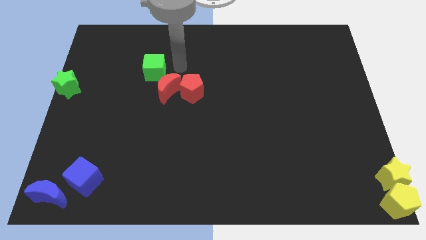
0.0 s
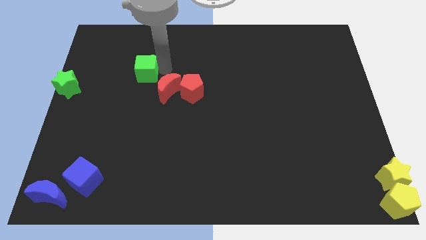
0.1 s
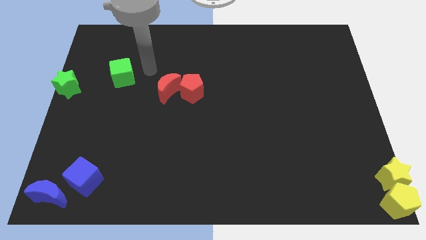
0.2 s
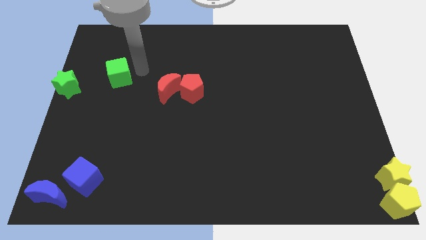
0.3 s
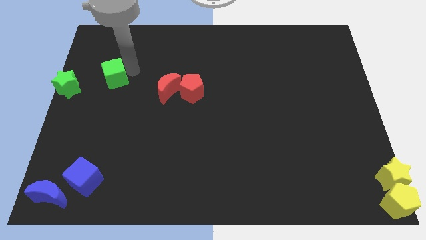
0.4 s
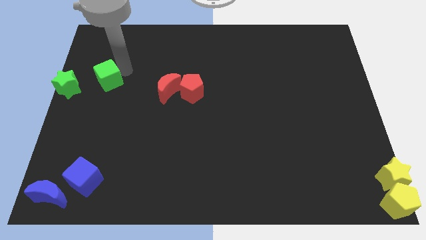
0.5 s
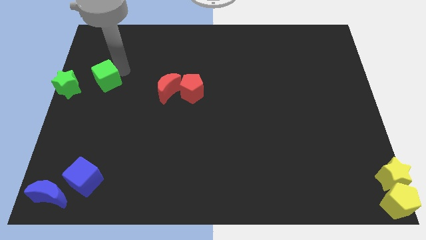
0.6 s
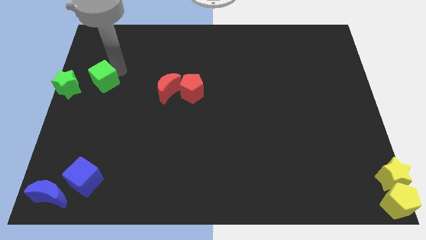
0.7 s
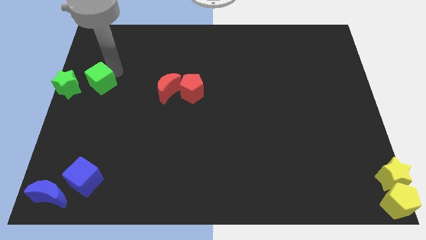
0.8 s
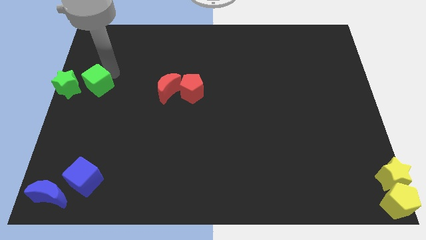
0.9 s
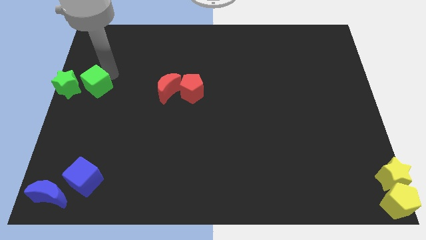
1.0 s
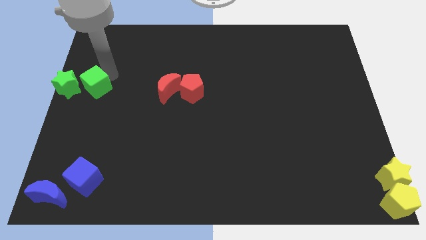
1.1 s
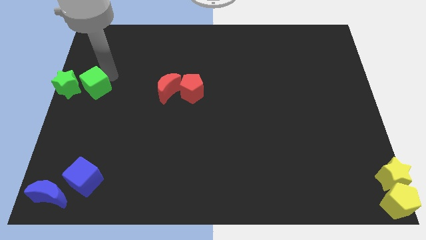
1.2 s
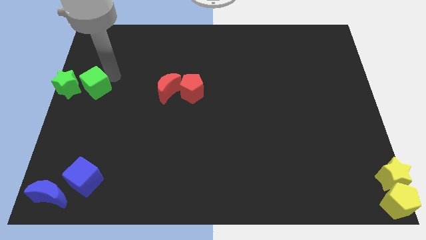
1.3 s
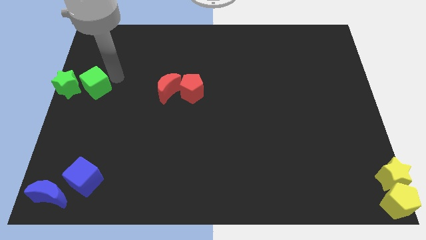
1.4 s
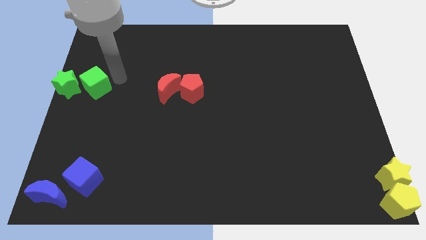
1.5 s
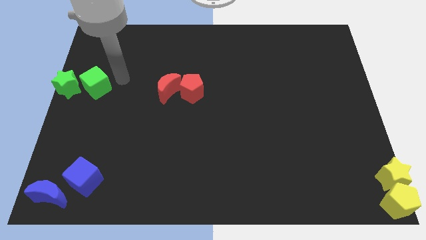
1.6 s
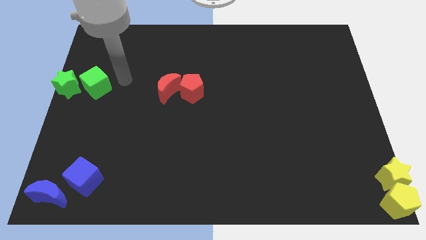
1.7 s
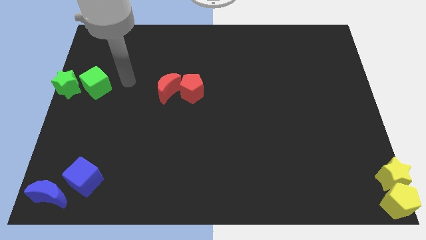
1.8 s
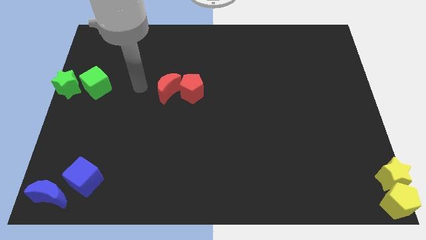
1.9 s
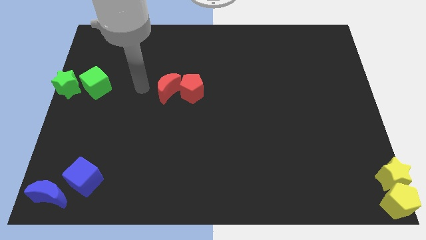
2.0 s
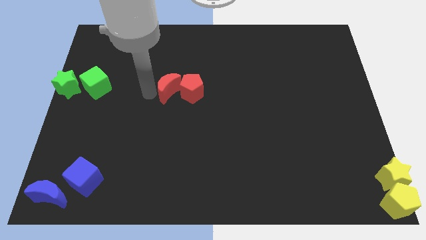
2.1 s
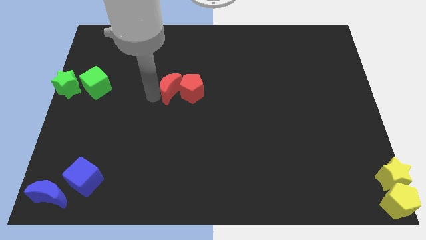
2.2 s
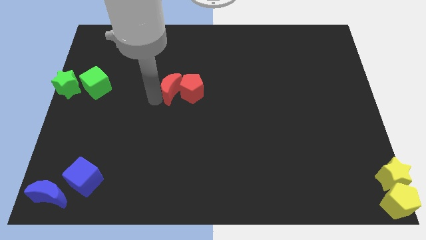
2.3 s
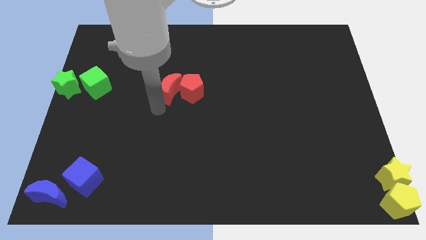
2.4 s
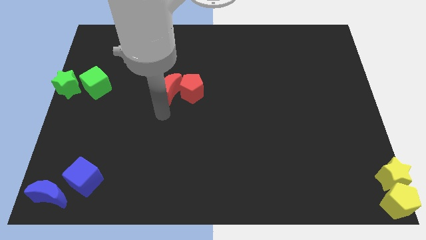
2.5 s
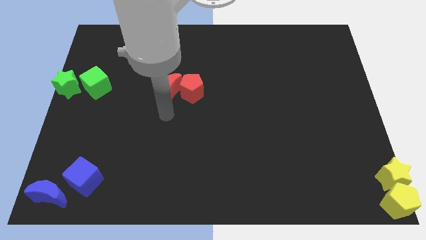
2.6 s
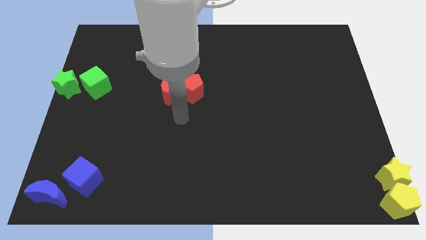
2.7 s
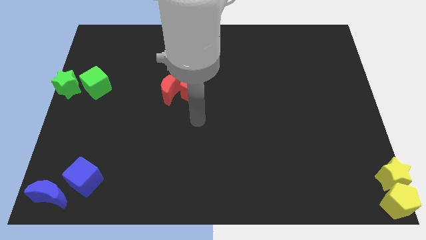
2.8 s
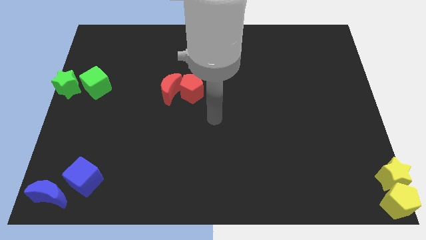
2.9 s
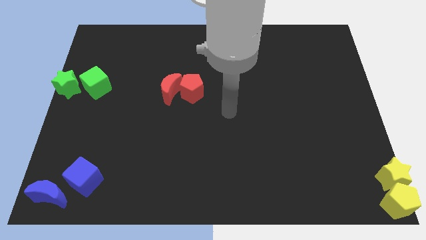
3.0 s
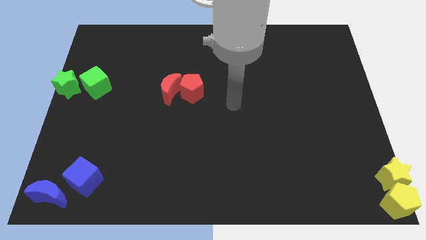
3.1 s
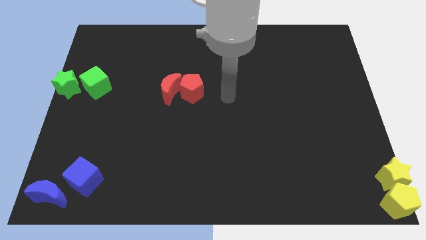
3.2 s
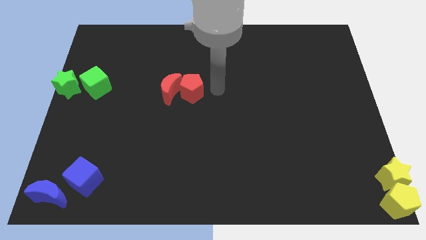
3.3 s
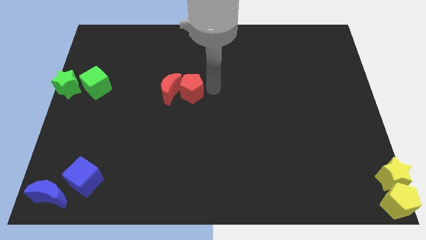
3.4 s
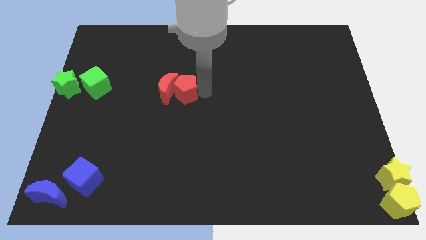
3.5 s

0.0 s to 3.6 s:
move green cube into green star

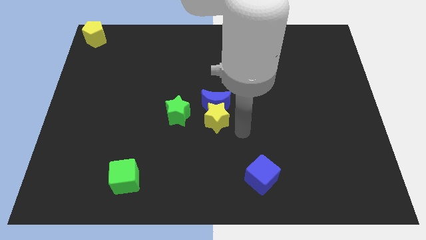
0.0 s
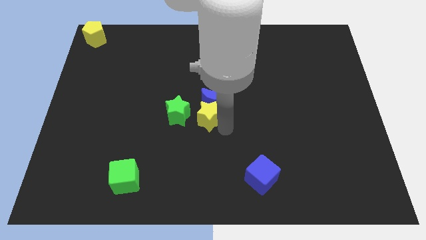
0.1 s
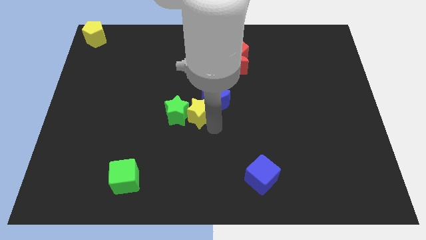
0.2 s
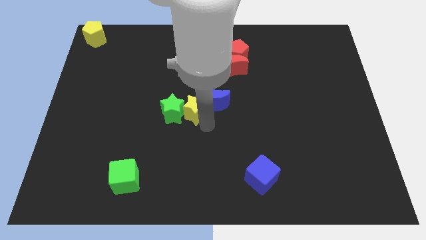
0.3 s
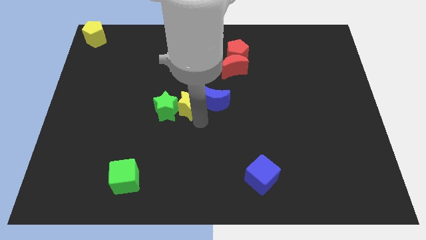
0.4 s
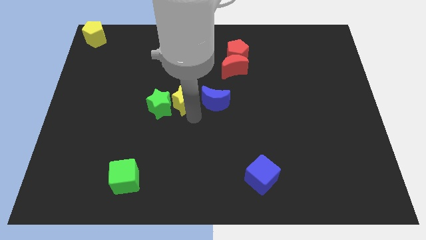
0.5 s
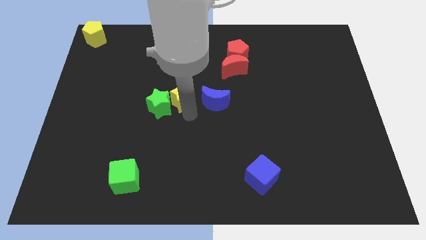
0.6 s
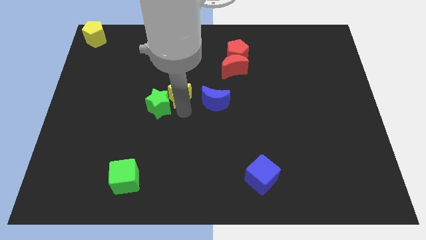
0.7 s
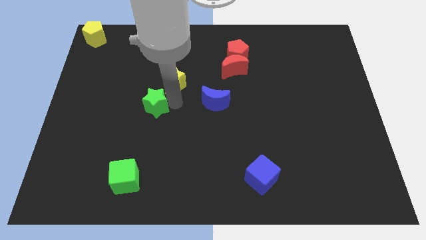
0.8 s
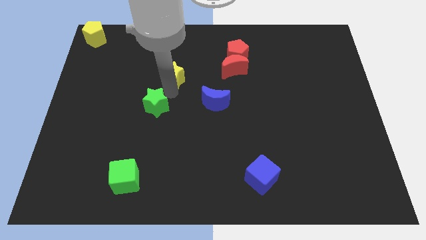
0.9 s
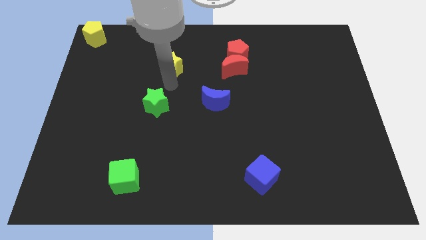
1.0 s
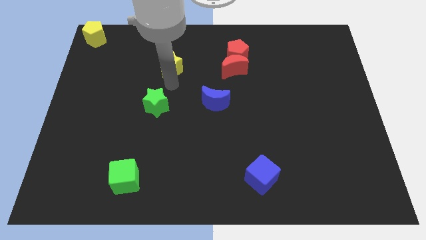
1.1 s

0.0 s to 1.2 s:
push the green star with the yellow star

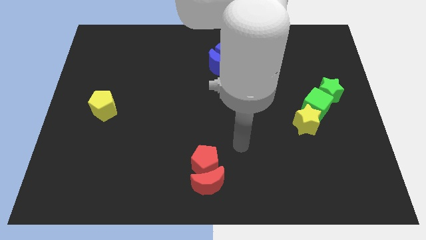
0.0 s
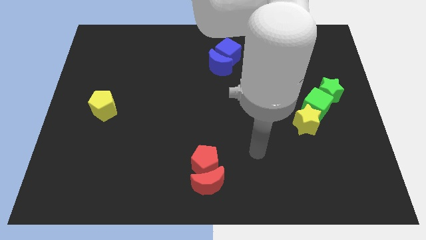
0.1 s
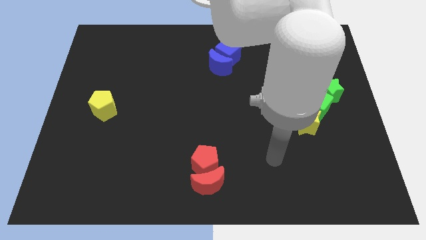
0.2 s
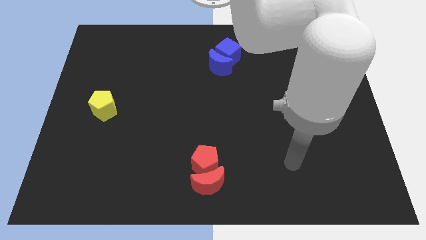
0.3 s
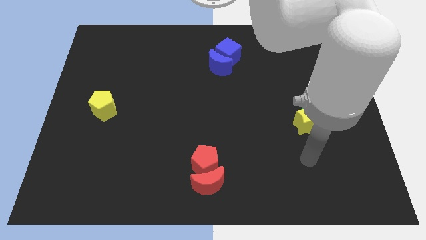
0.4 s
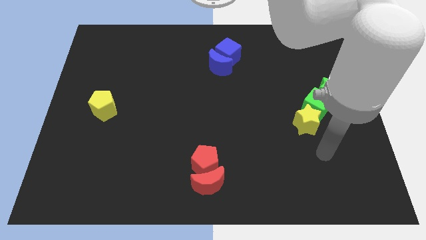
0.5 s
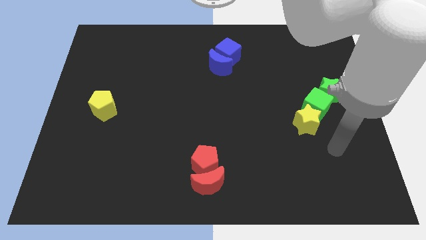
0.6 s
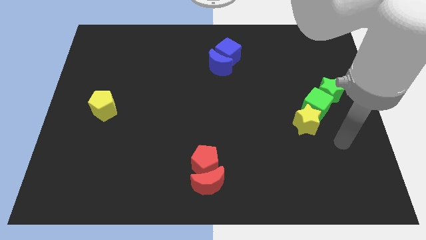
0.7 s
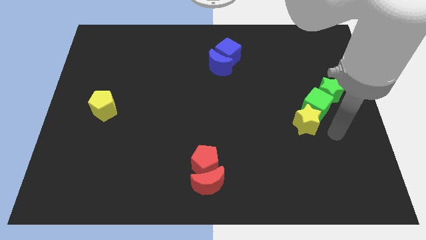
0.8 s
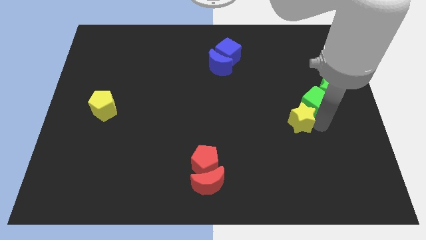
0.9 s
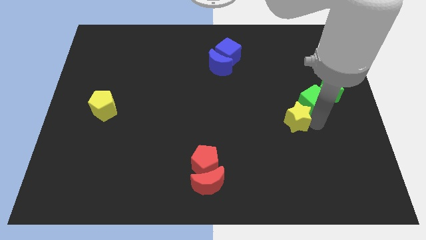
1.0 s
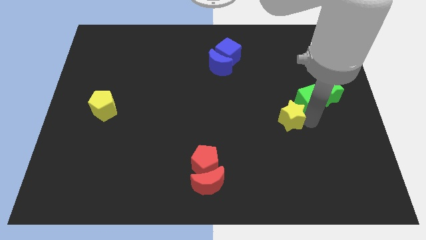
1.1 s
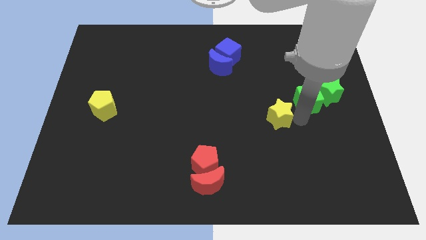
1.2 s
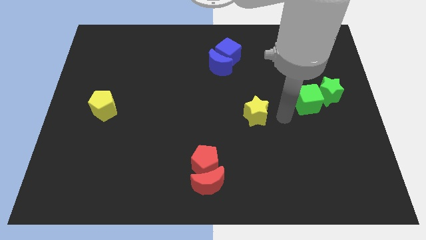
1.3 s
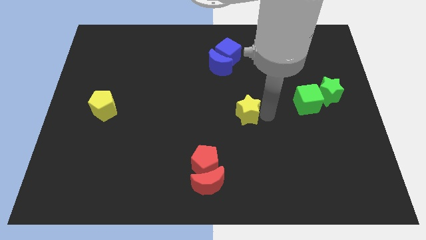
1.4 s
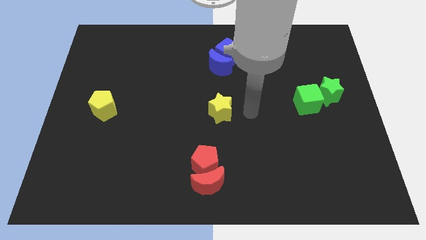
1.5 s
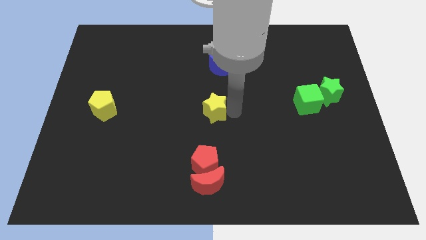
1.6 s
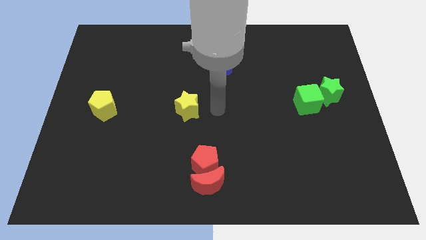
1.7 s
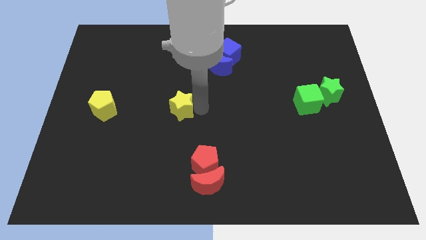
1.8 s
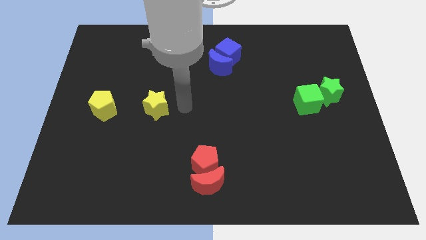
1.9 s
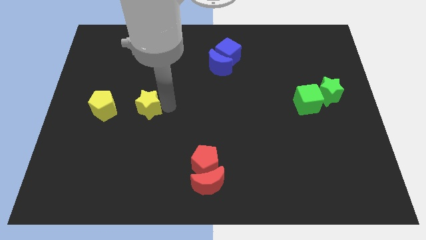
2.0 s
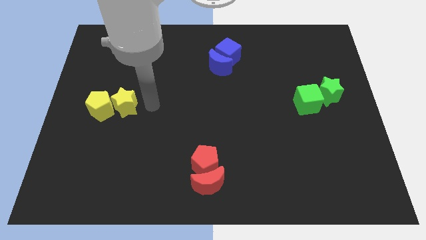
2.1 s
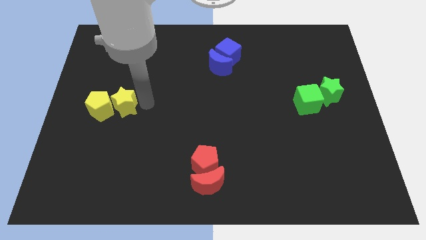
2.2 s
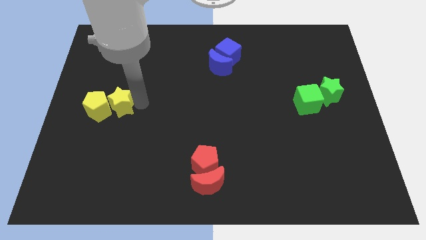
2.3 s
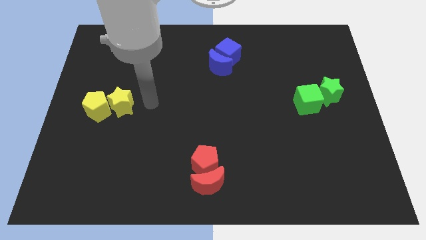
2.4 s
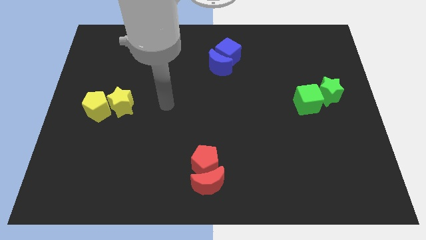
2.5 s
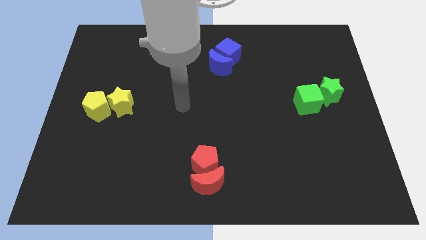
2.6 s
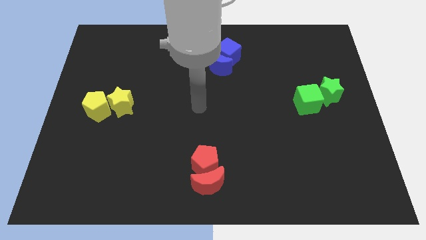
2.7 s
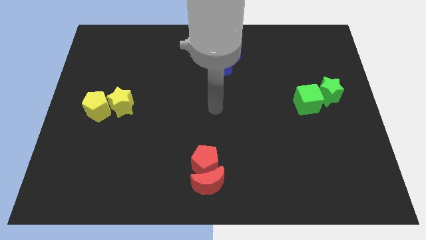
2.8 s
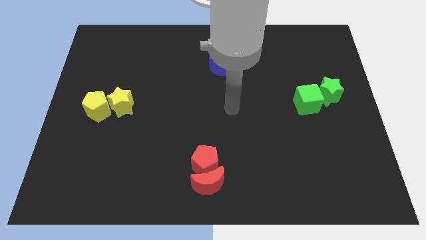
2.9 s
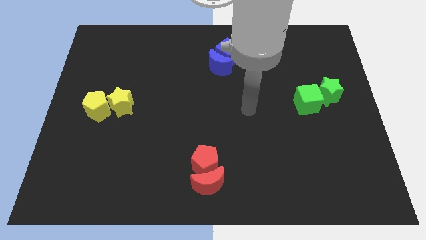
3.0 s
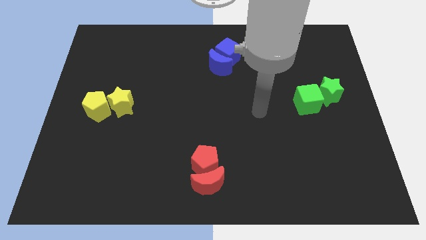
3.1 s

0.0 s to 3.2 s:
move the yellow star to the right side of the yellow pentagon

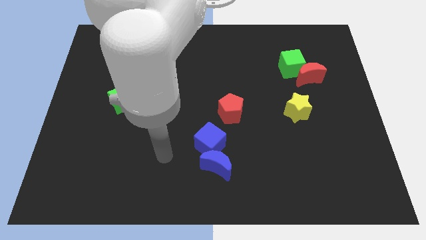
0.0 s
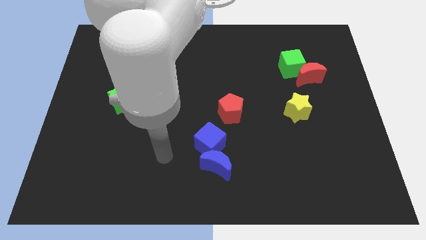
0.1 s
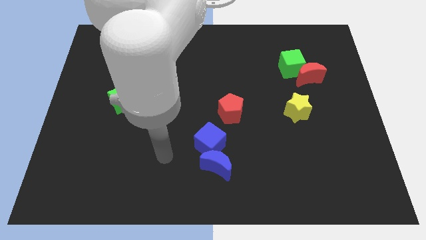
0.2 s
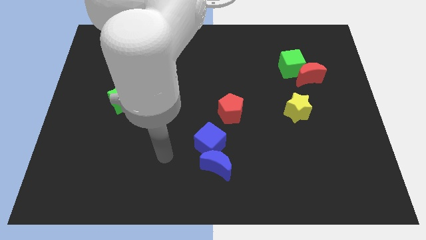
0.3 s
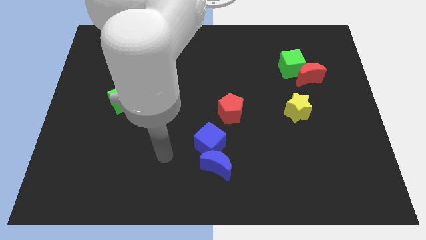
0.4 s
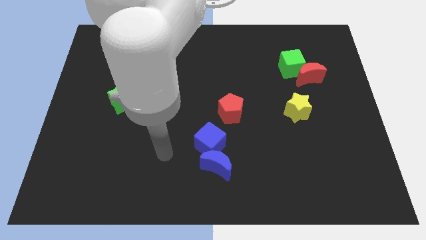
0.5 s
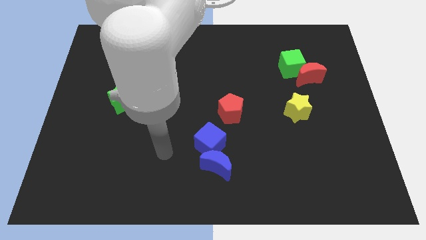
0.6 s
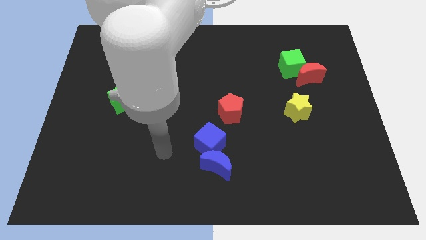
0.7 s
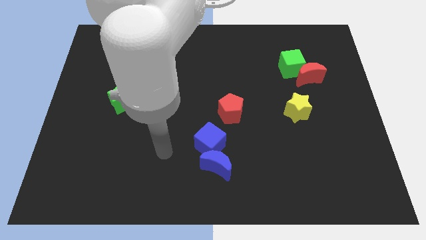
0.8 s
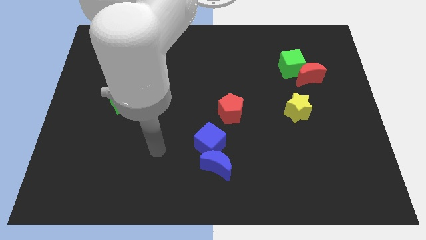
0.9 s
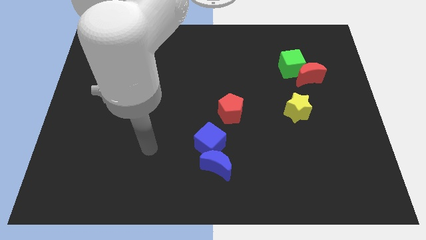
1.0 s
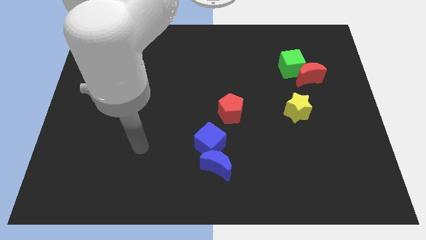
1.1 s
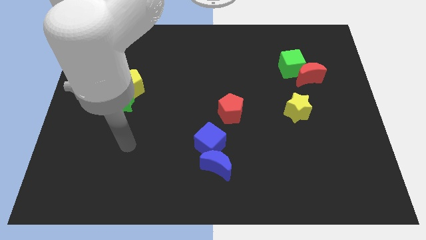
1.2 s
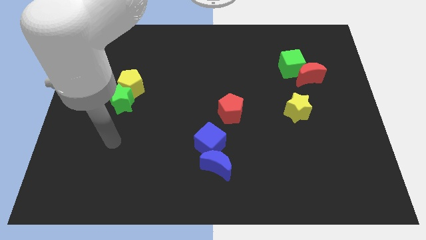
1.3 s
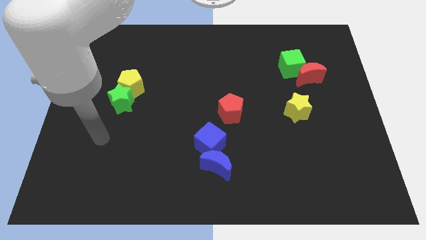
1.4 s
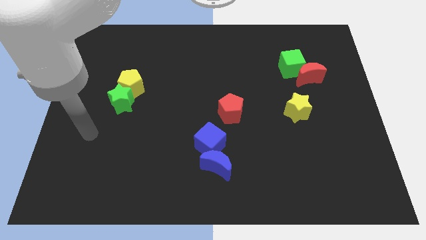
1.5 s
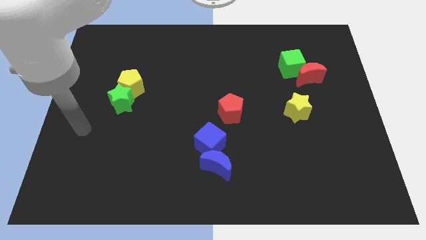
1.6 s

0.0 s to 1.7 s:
move your hand towards the center left
